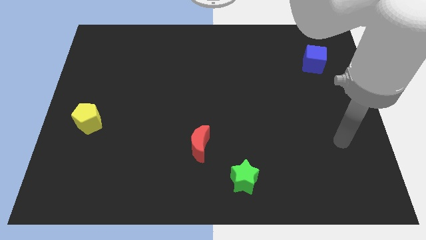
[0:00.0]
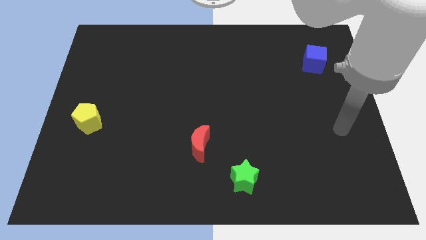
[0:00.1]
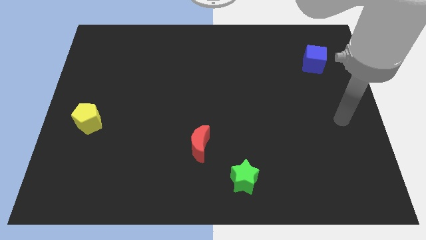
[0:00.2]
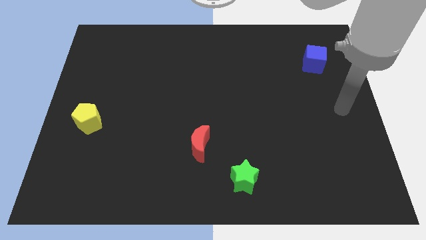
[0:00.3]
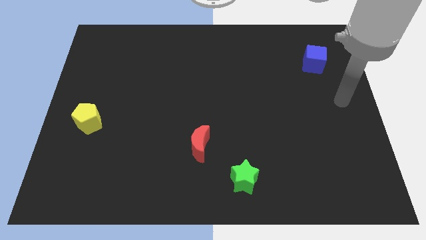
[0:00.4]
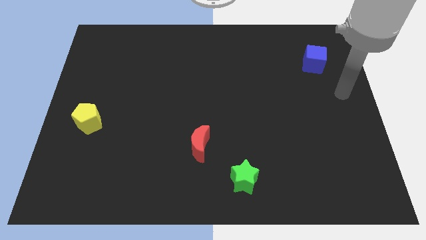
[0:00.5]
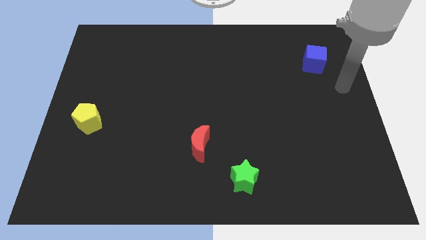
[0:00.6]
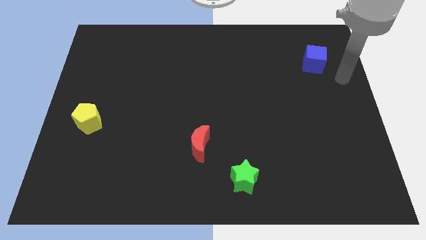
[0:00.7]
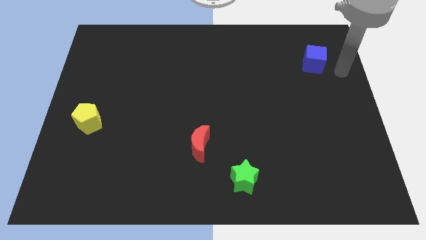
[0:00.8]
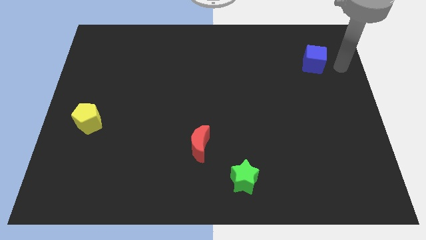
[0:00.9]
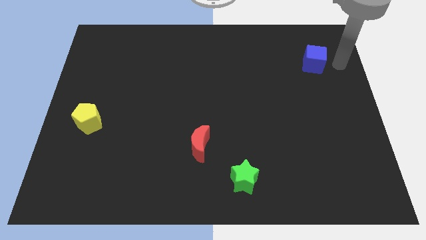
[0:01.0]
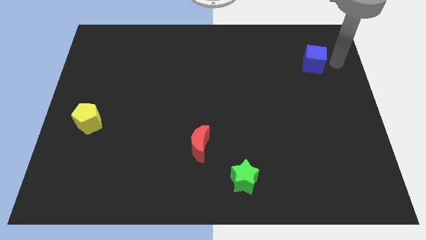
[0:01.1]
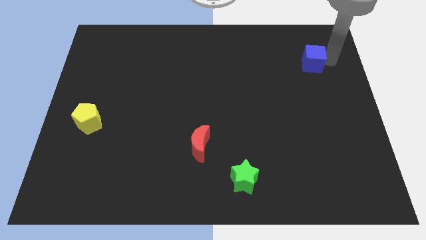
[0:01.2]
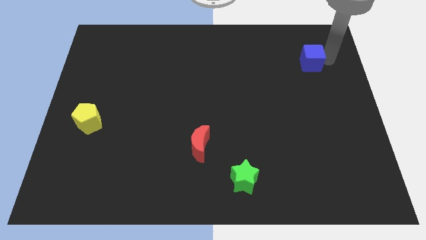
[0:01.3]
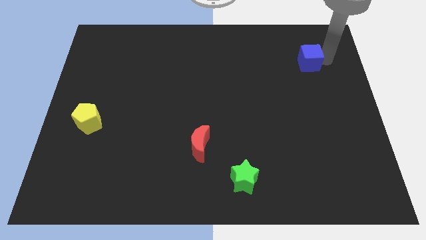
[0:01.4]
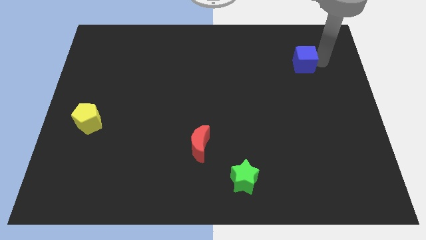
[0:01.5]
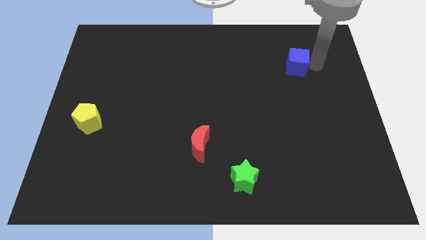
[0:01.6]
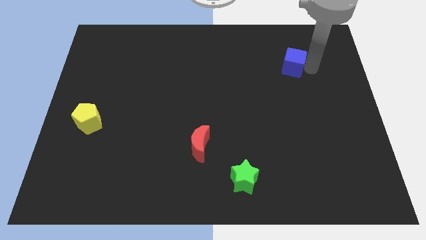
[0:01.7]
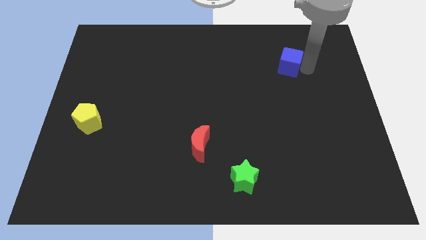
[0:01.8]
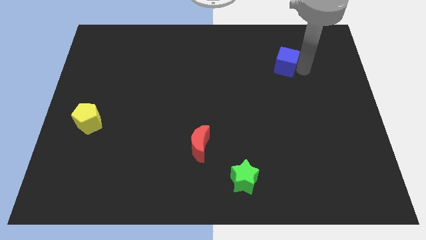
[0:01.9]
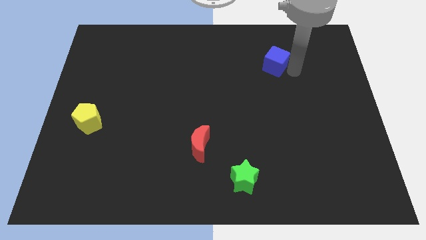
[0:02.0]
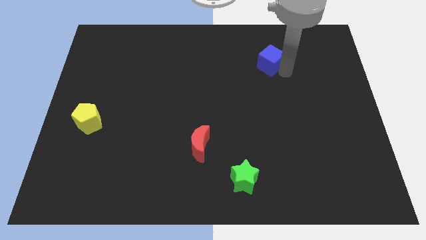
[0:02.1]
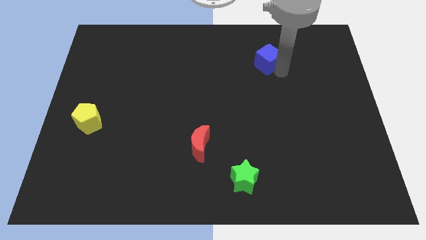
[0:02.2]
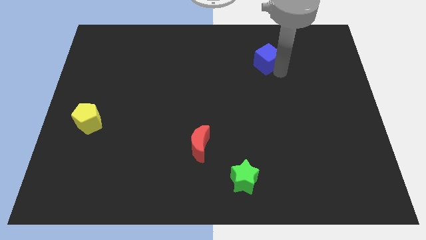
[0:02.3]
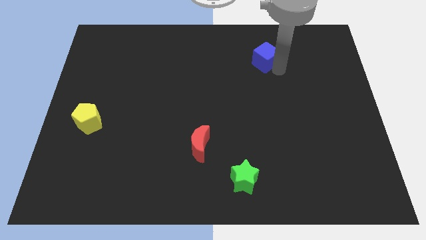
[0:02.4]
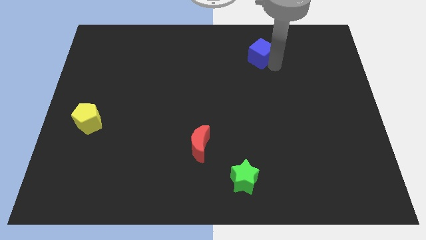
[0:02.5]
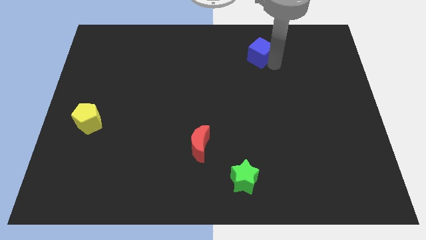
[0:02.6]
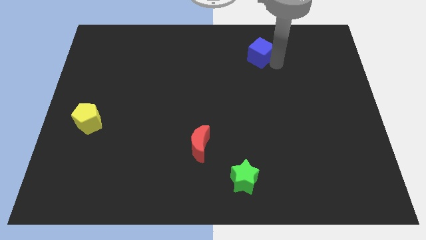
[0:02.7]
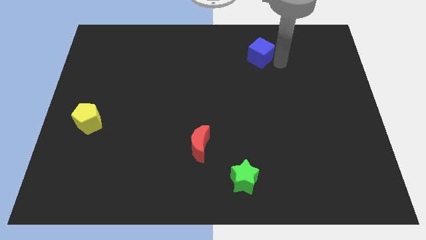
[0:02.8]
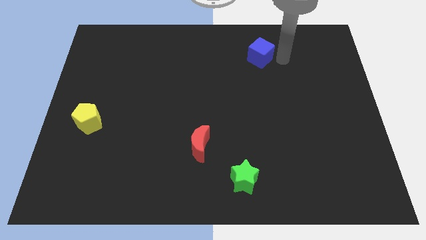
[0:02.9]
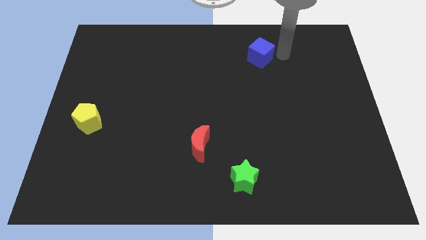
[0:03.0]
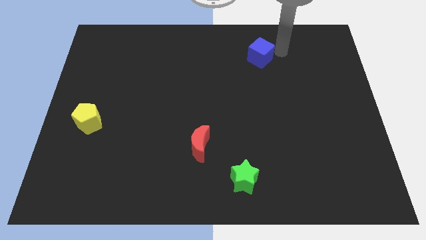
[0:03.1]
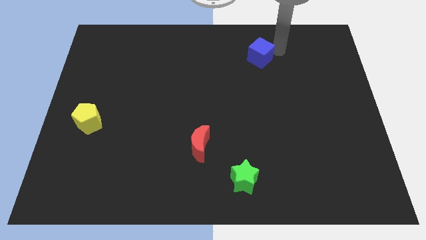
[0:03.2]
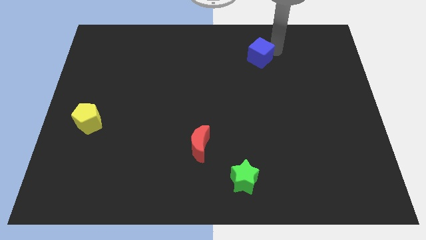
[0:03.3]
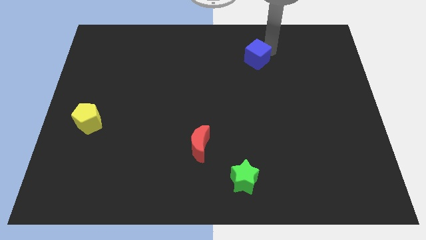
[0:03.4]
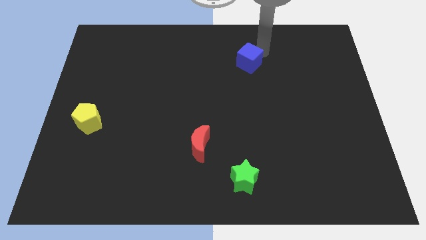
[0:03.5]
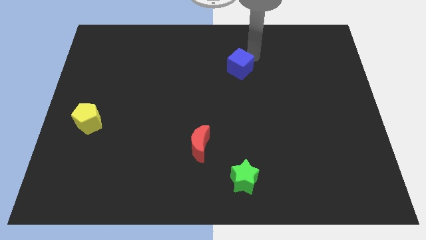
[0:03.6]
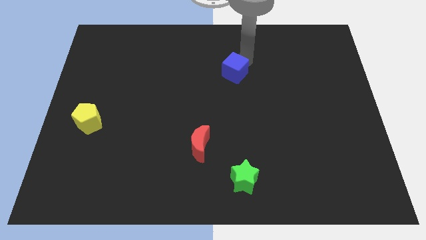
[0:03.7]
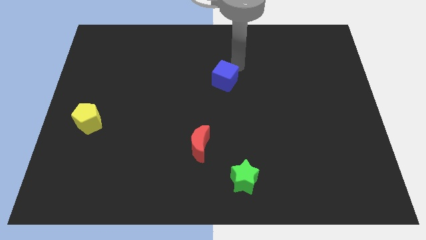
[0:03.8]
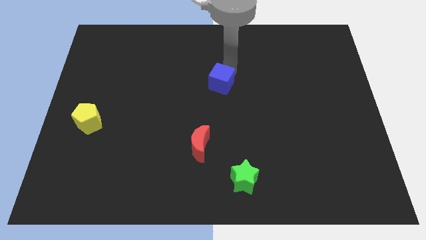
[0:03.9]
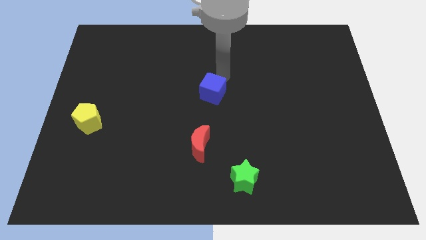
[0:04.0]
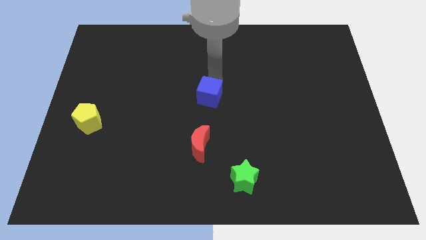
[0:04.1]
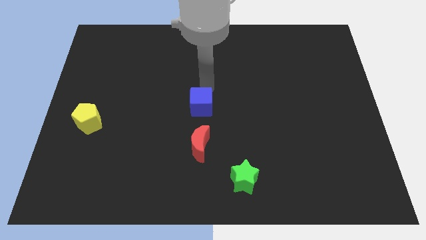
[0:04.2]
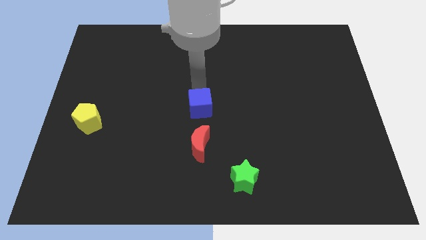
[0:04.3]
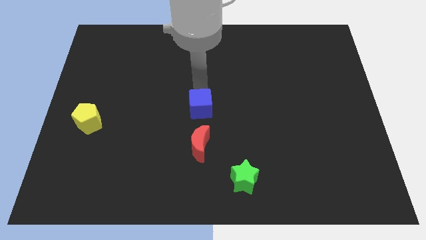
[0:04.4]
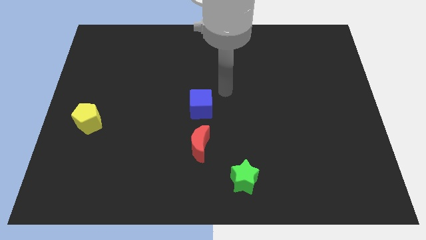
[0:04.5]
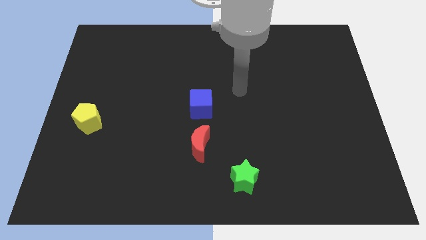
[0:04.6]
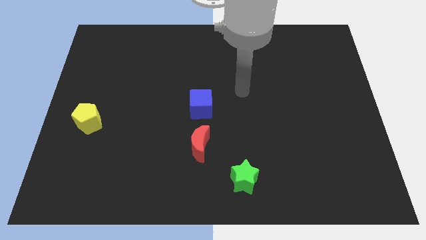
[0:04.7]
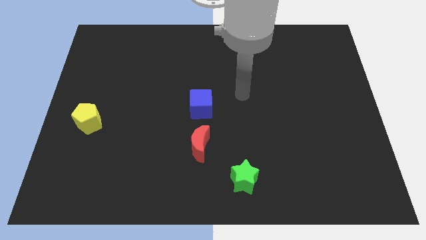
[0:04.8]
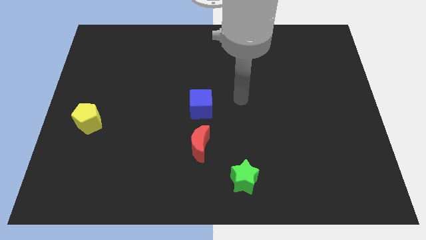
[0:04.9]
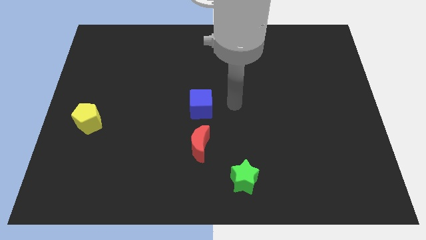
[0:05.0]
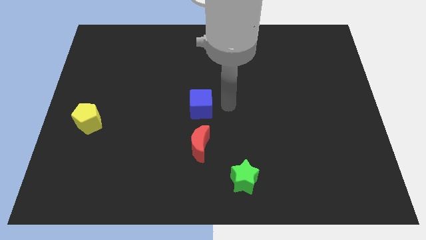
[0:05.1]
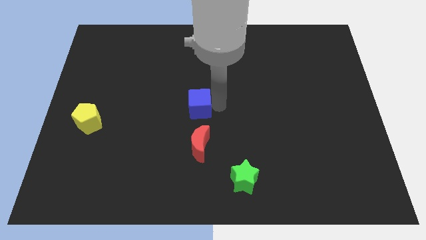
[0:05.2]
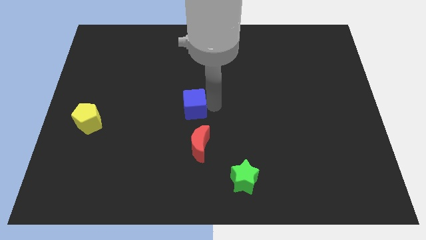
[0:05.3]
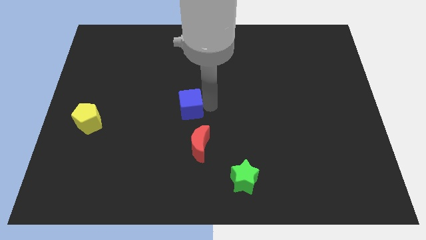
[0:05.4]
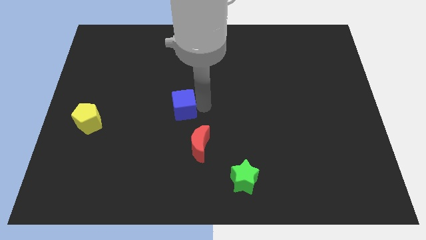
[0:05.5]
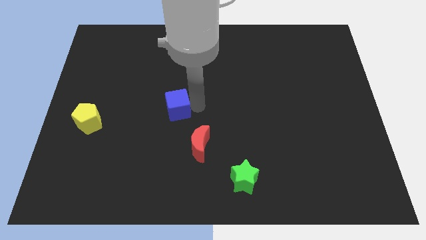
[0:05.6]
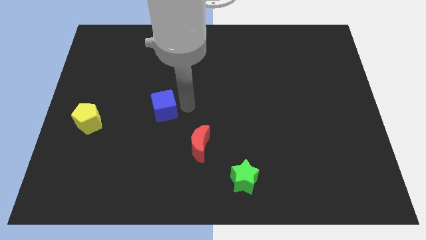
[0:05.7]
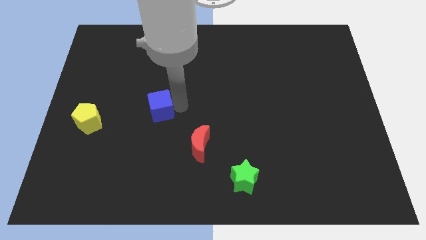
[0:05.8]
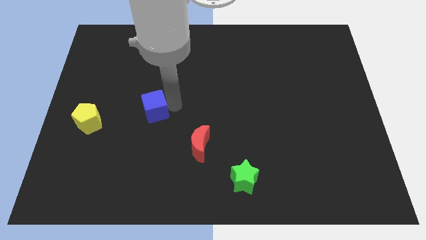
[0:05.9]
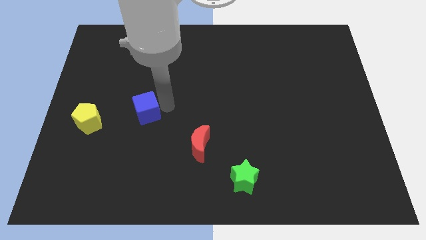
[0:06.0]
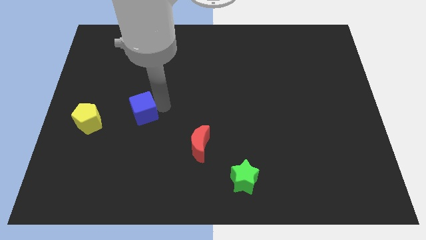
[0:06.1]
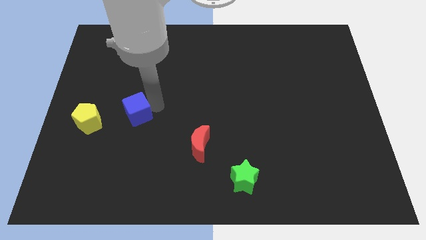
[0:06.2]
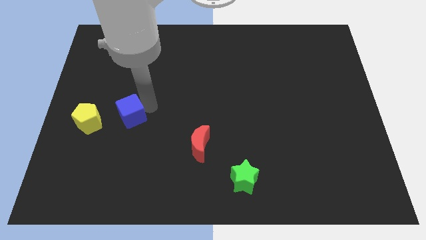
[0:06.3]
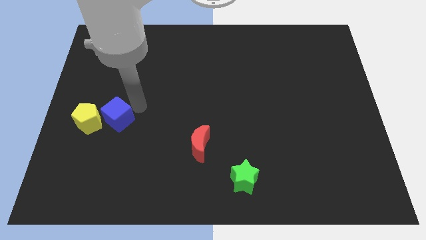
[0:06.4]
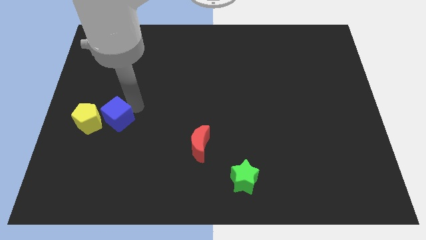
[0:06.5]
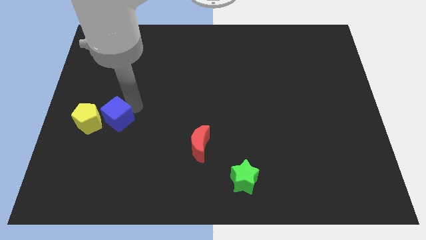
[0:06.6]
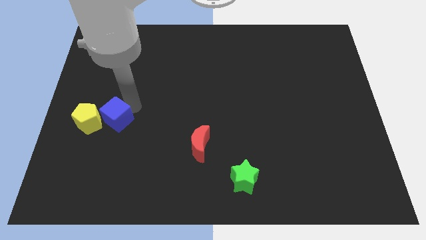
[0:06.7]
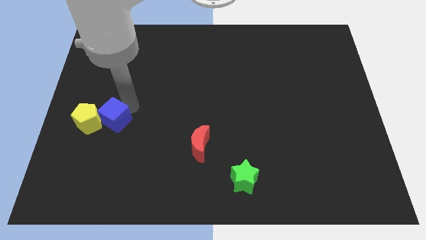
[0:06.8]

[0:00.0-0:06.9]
move the cube close to the yellow pentagon

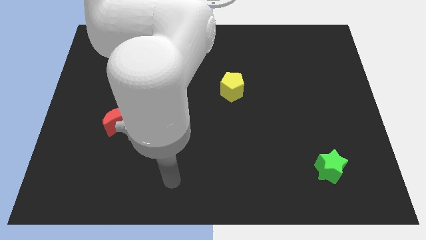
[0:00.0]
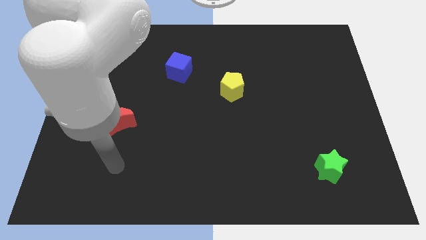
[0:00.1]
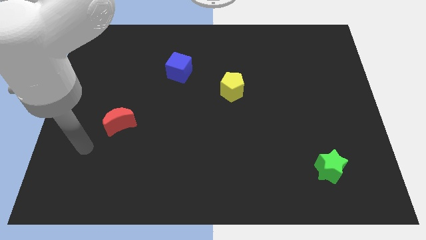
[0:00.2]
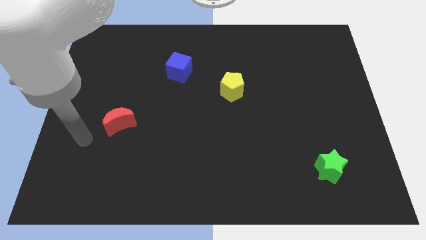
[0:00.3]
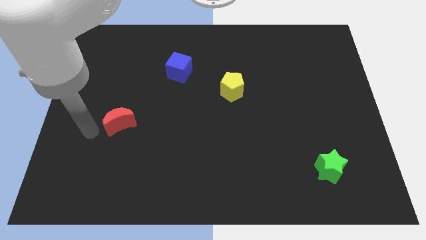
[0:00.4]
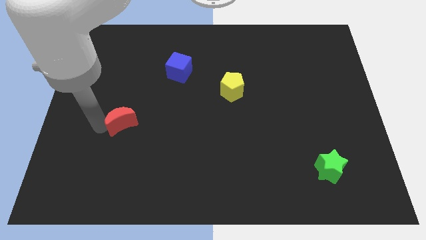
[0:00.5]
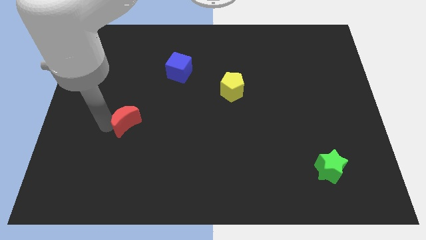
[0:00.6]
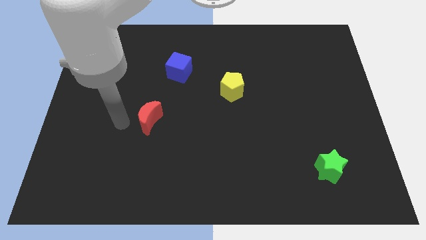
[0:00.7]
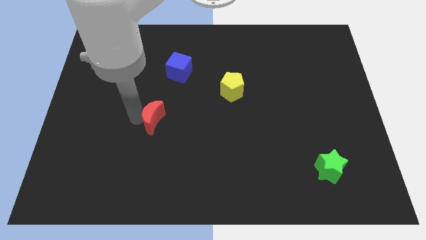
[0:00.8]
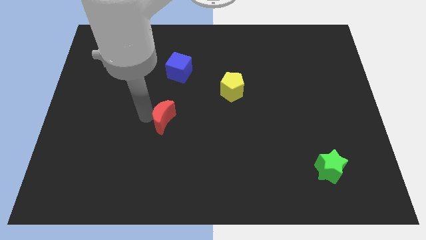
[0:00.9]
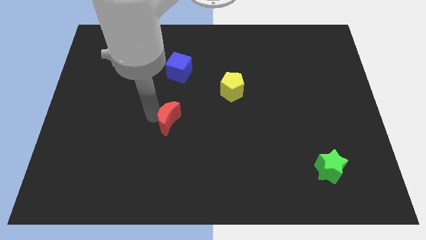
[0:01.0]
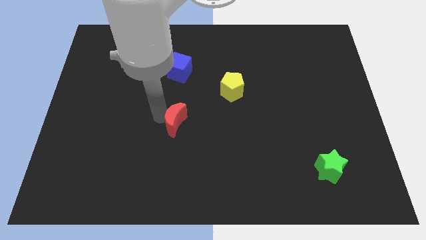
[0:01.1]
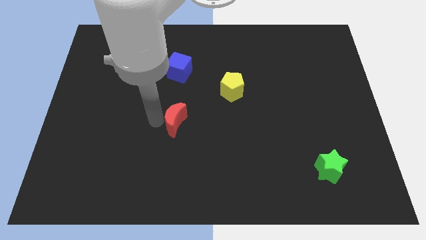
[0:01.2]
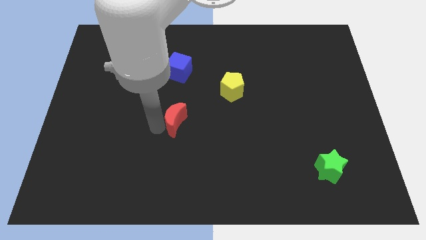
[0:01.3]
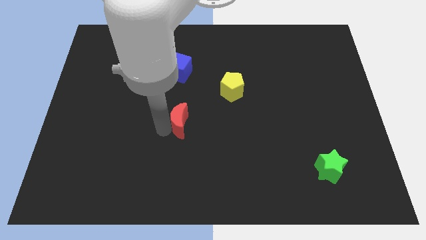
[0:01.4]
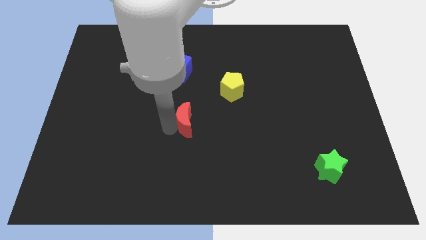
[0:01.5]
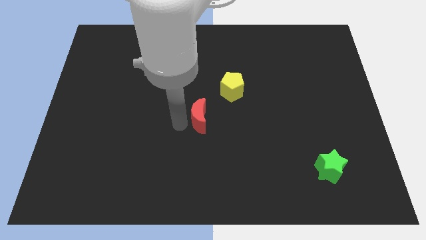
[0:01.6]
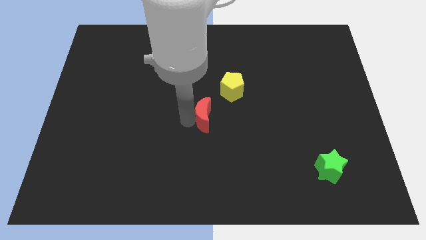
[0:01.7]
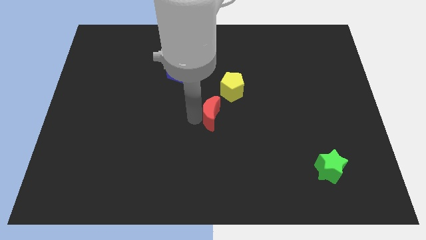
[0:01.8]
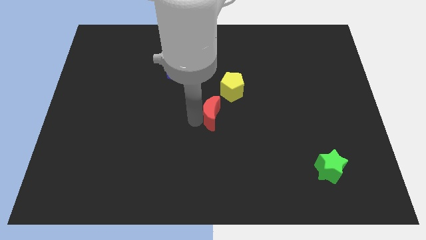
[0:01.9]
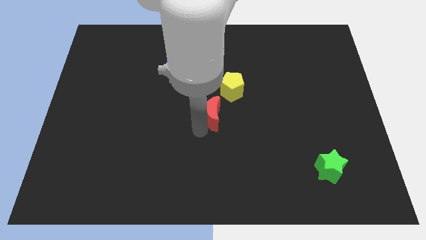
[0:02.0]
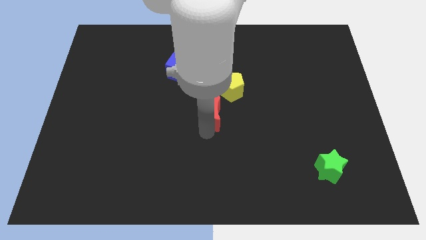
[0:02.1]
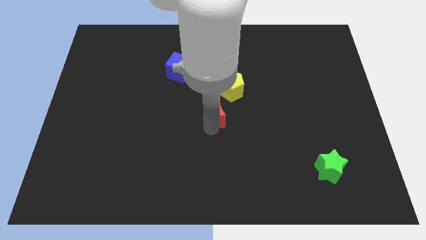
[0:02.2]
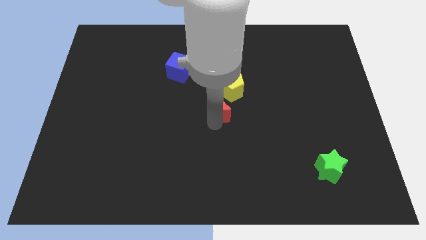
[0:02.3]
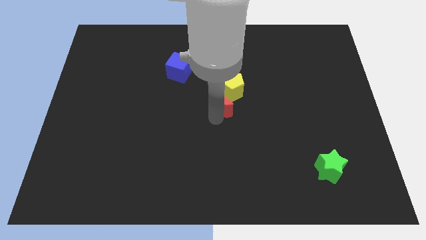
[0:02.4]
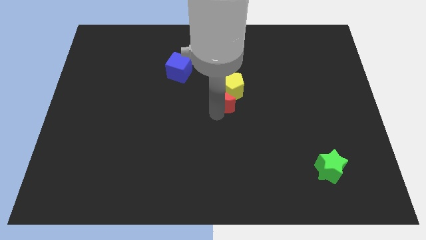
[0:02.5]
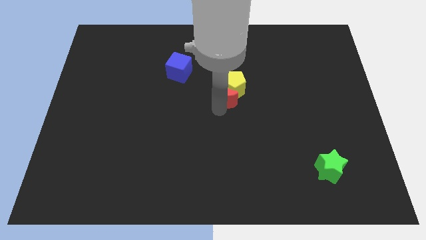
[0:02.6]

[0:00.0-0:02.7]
slide the red block close to the yellow pentagon
